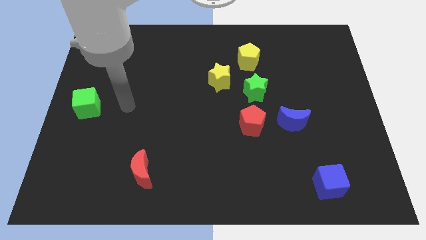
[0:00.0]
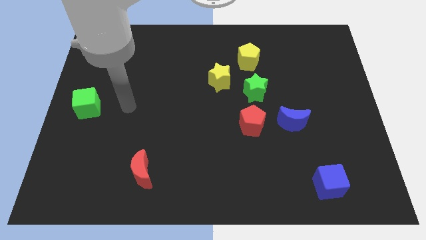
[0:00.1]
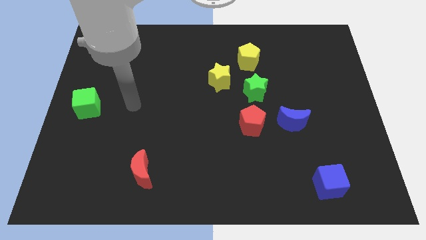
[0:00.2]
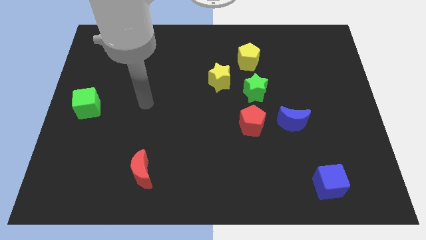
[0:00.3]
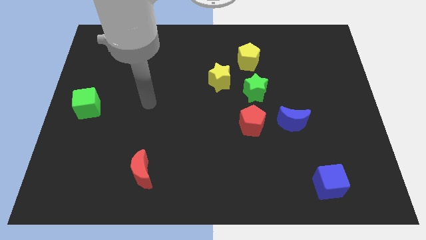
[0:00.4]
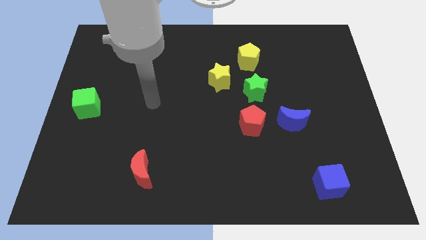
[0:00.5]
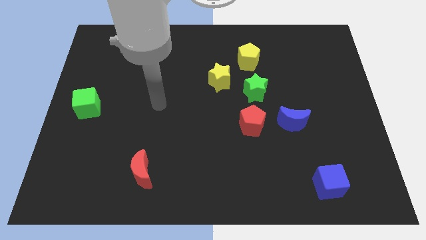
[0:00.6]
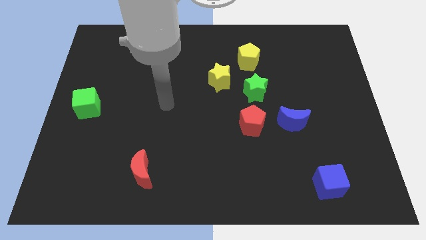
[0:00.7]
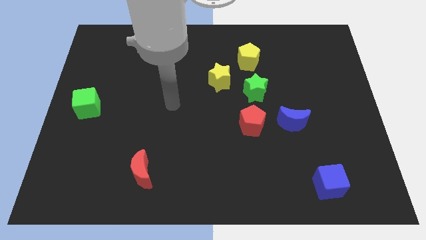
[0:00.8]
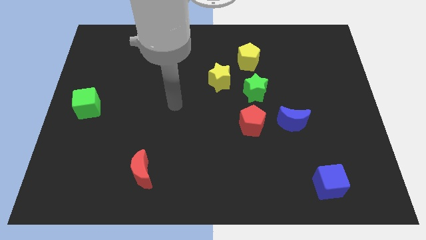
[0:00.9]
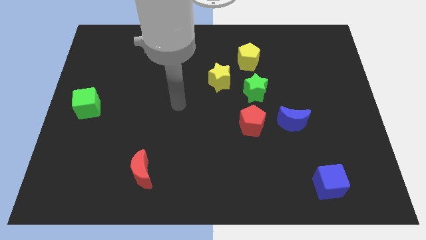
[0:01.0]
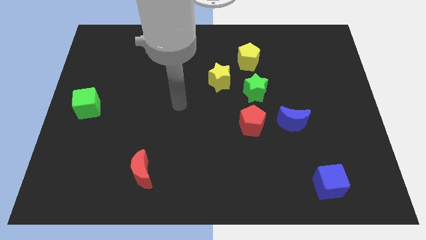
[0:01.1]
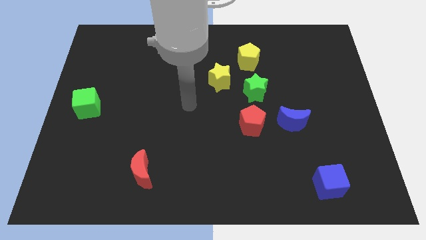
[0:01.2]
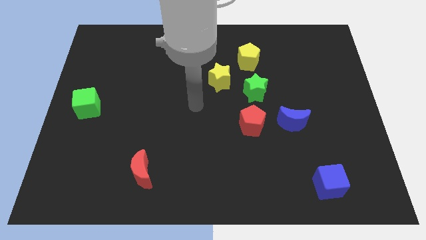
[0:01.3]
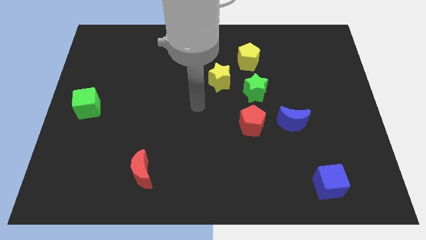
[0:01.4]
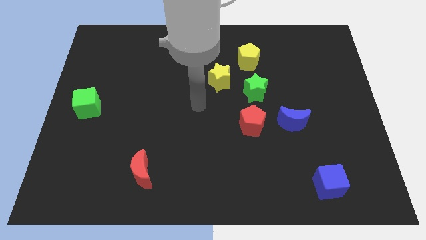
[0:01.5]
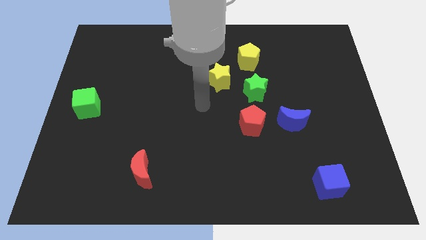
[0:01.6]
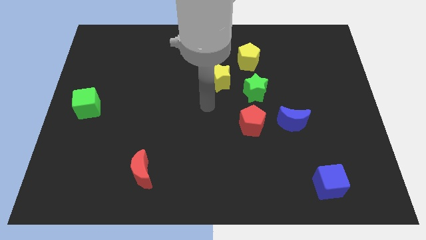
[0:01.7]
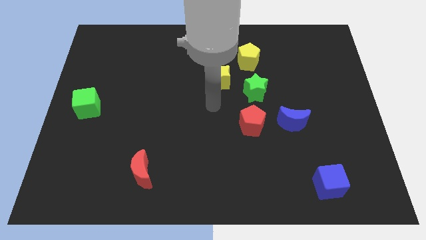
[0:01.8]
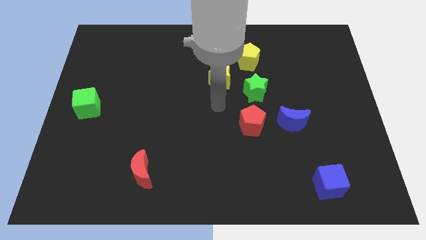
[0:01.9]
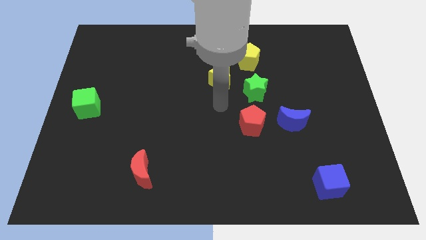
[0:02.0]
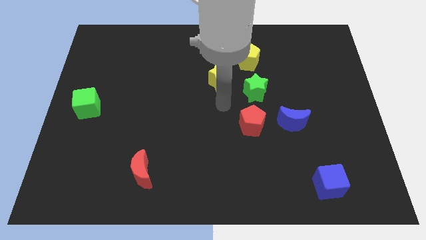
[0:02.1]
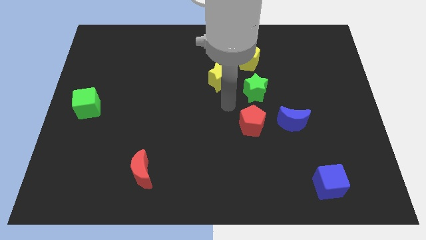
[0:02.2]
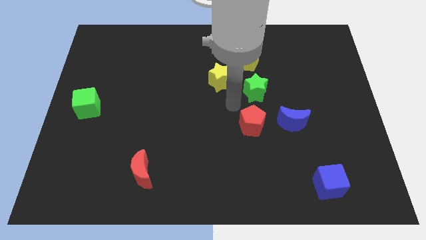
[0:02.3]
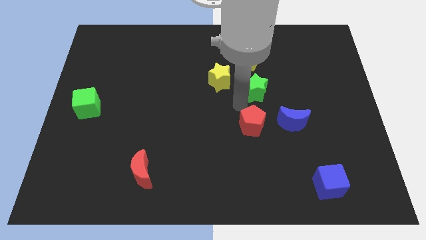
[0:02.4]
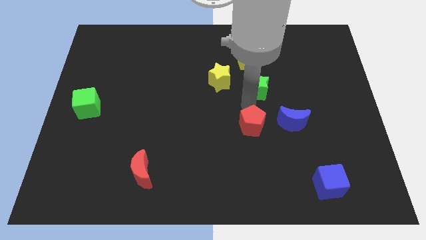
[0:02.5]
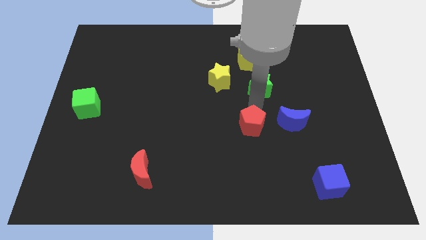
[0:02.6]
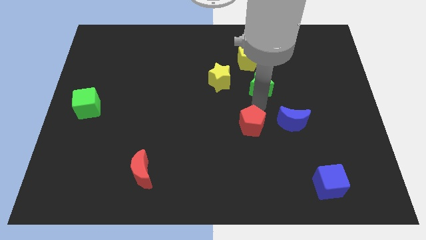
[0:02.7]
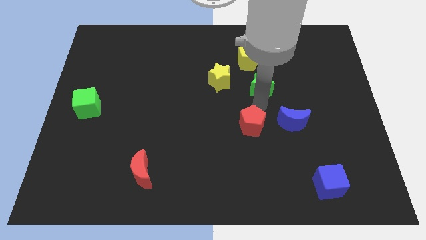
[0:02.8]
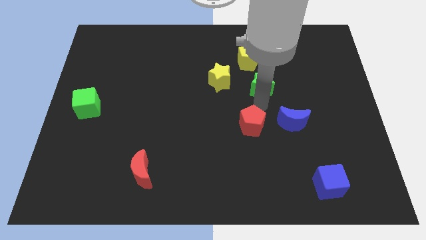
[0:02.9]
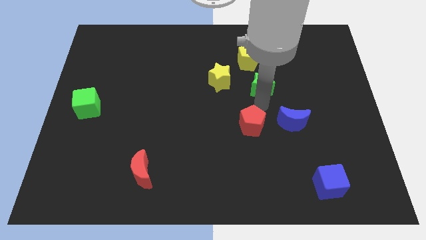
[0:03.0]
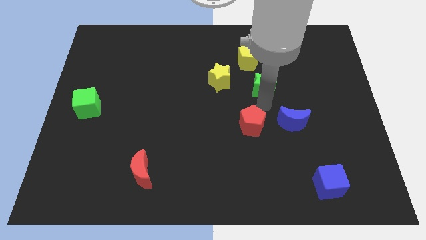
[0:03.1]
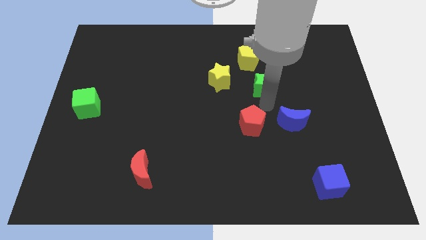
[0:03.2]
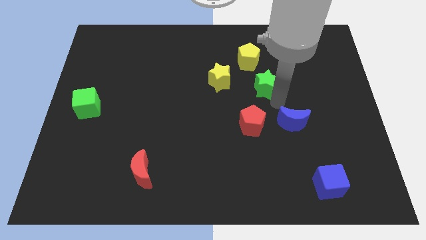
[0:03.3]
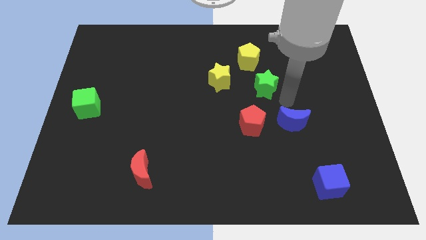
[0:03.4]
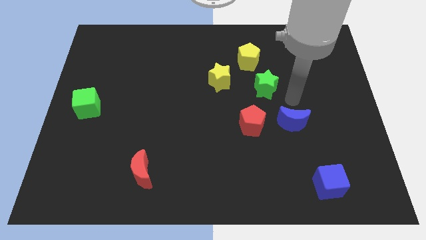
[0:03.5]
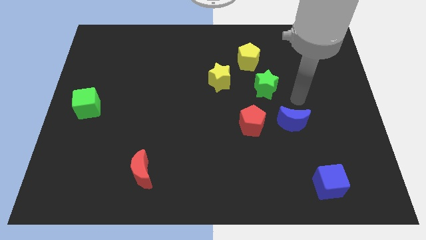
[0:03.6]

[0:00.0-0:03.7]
touch the bottom side of the green star

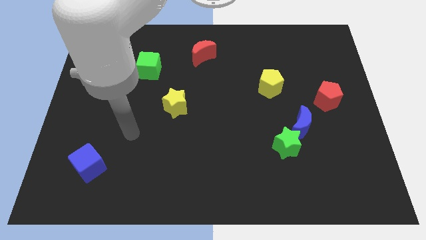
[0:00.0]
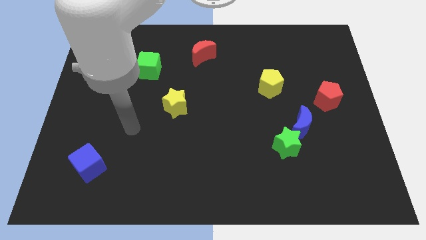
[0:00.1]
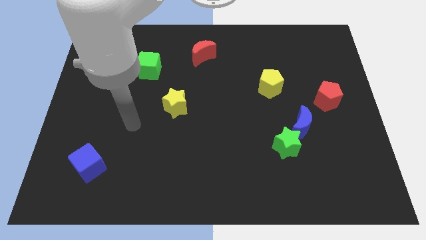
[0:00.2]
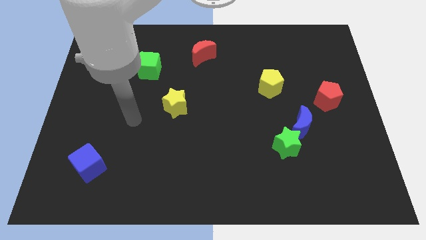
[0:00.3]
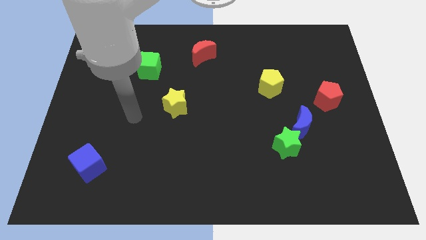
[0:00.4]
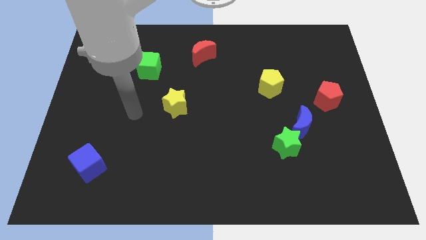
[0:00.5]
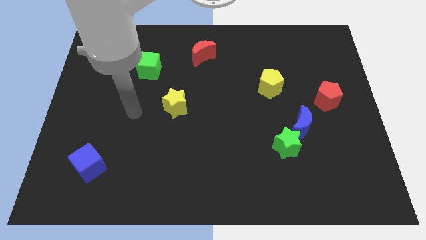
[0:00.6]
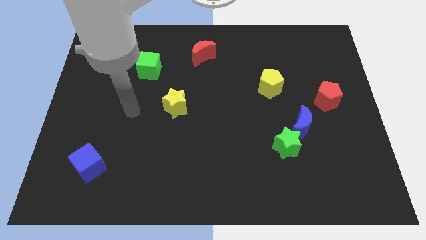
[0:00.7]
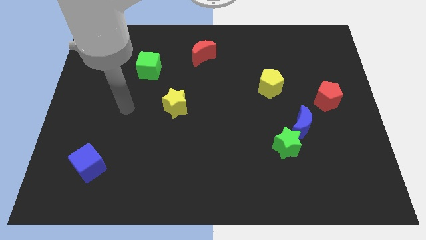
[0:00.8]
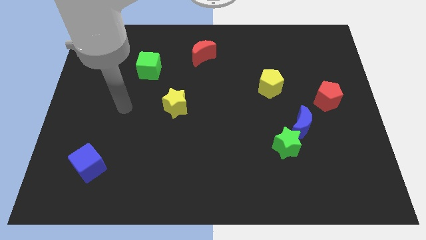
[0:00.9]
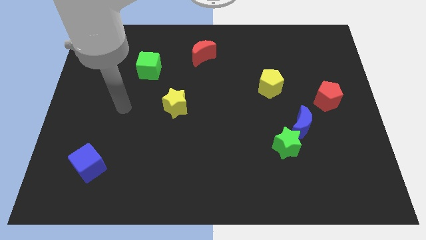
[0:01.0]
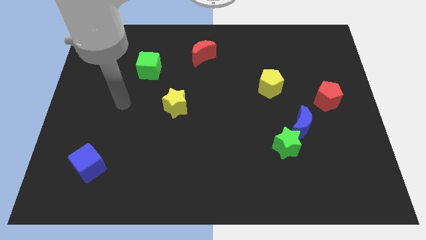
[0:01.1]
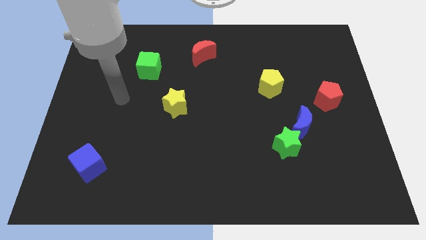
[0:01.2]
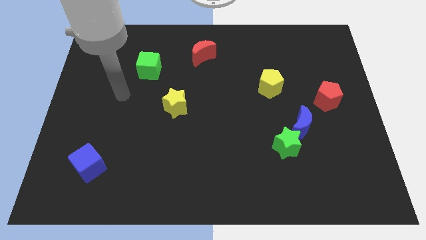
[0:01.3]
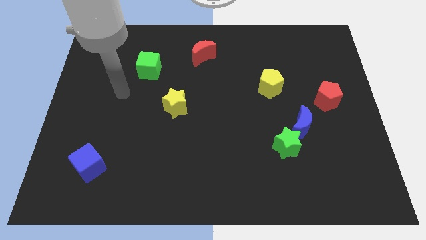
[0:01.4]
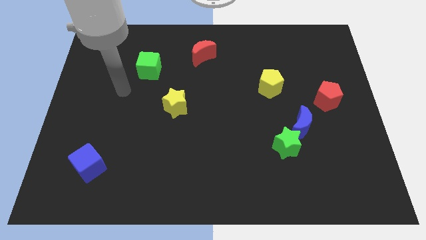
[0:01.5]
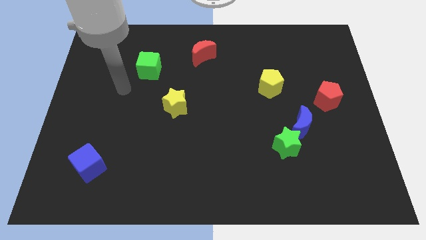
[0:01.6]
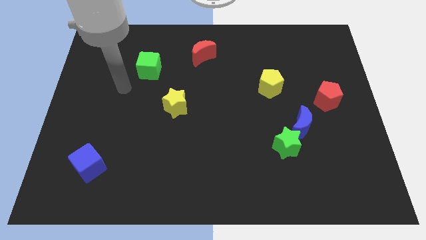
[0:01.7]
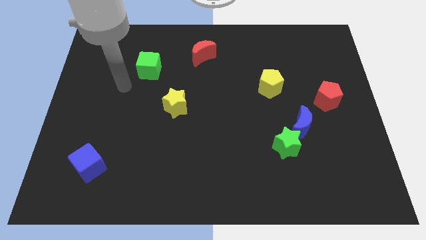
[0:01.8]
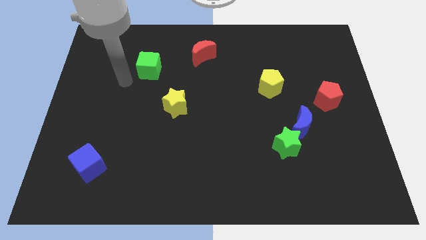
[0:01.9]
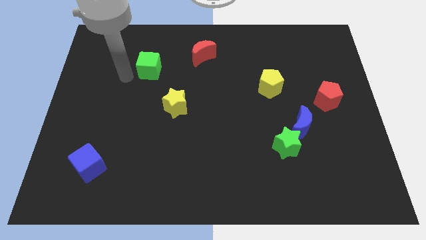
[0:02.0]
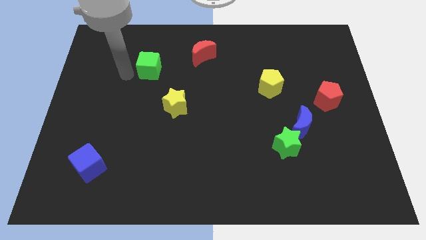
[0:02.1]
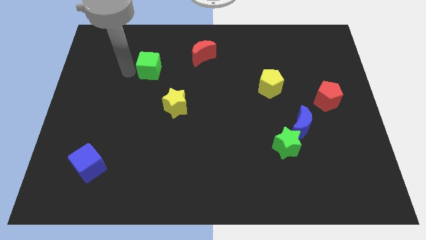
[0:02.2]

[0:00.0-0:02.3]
place your arm to the right of green cube

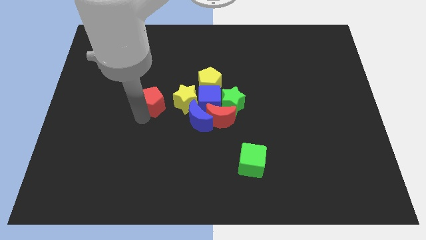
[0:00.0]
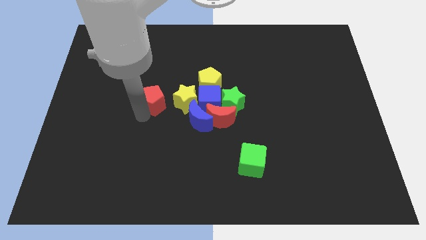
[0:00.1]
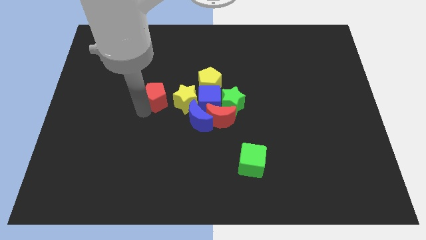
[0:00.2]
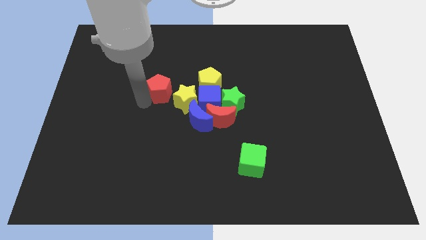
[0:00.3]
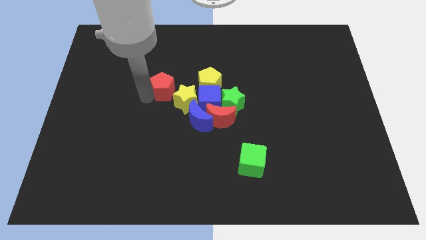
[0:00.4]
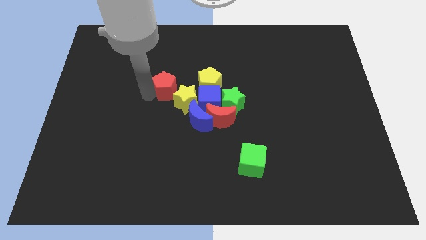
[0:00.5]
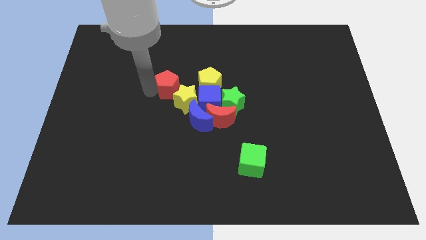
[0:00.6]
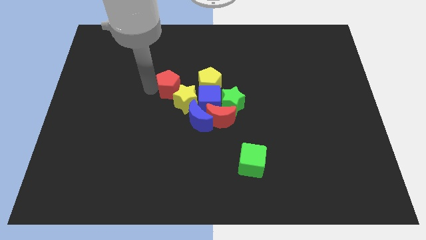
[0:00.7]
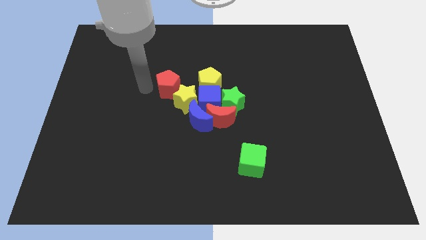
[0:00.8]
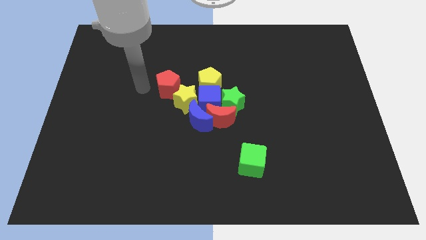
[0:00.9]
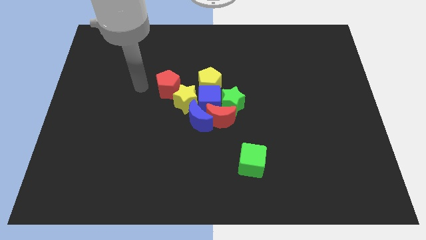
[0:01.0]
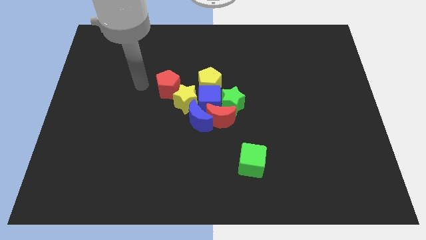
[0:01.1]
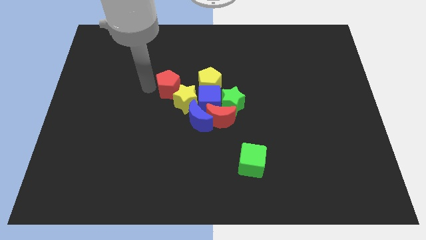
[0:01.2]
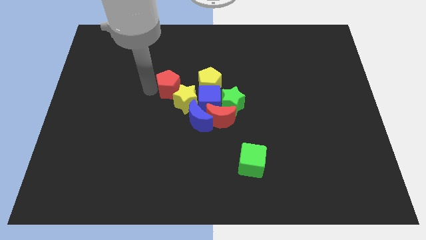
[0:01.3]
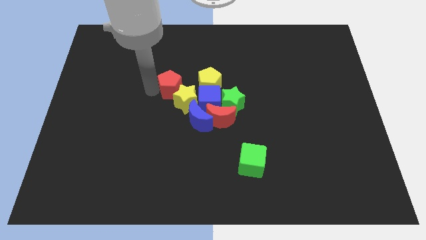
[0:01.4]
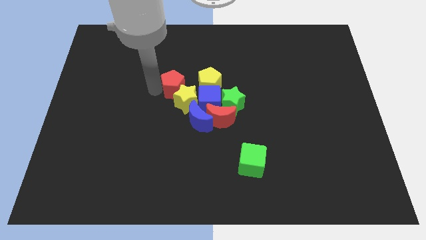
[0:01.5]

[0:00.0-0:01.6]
place the red pentagon above of the yellow star

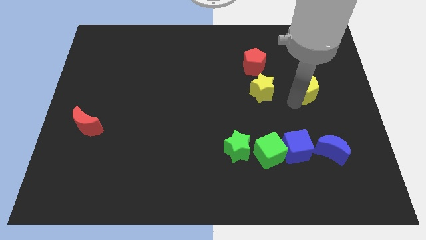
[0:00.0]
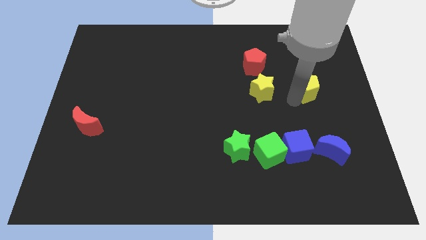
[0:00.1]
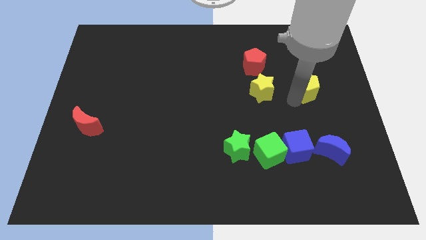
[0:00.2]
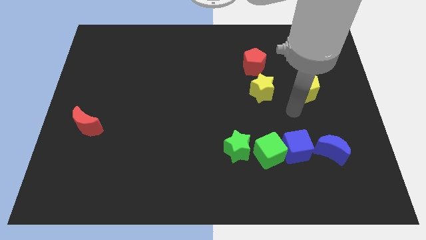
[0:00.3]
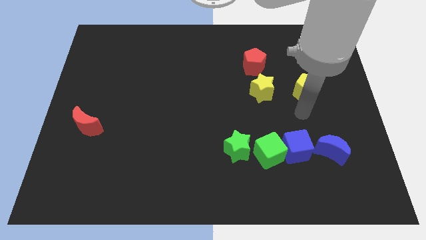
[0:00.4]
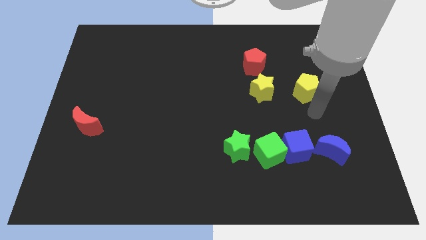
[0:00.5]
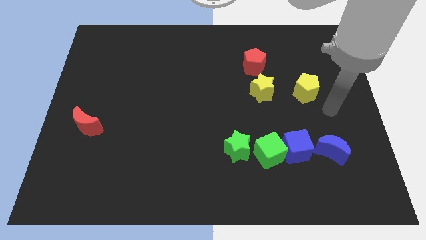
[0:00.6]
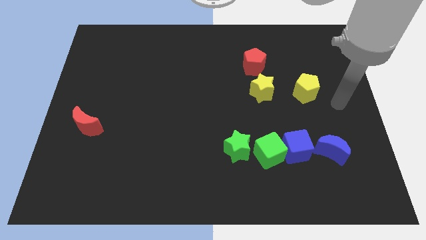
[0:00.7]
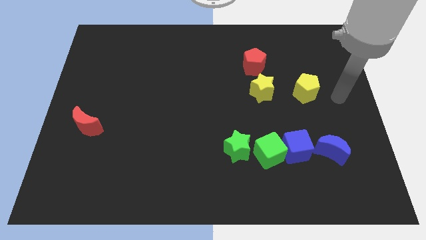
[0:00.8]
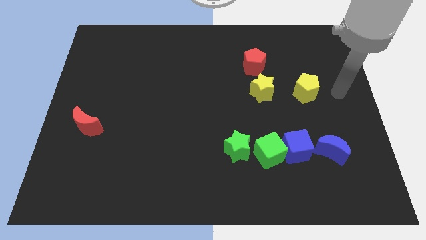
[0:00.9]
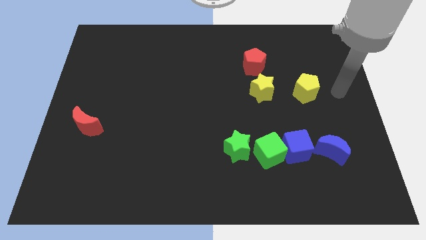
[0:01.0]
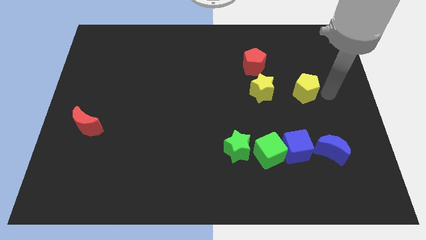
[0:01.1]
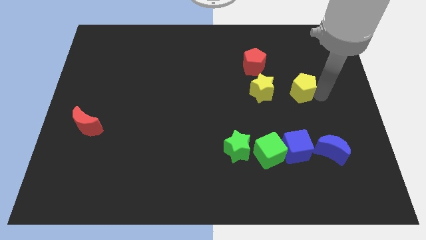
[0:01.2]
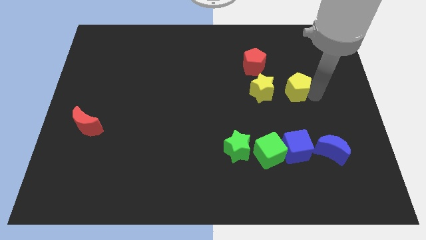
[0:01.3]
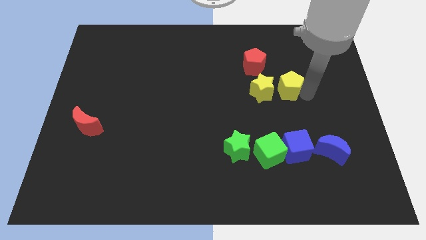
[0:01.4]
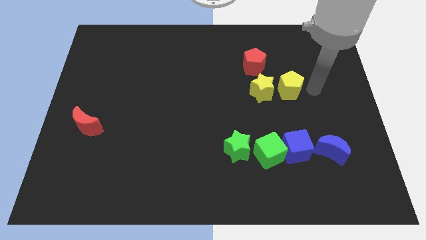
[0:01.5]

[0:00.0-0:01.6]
put the yellow pentagon on the right side of the yellow star
